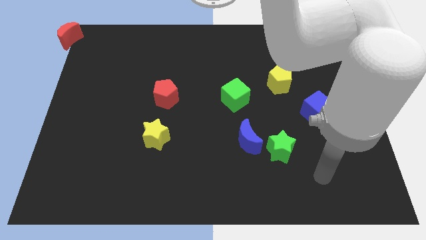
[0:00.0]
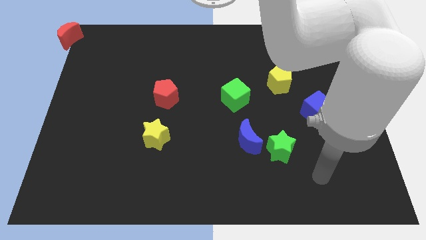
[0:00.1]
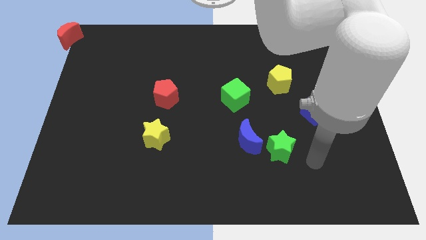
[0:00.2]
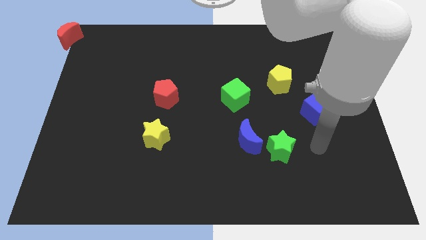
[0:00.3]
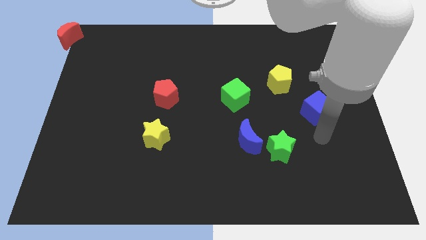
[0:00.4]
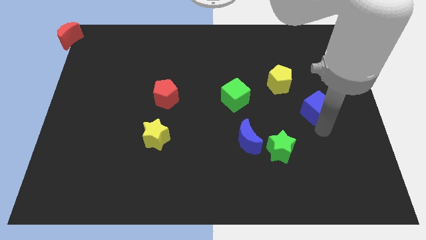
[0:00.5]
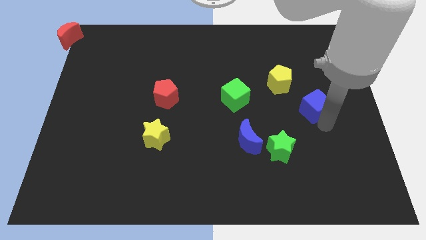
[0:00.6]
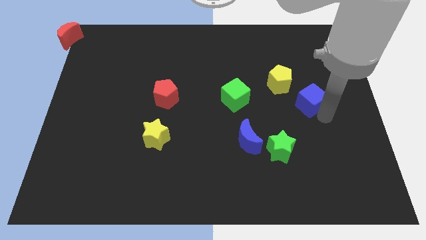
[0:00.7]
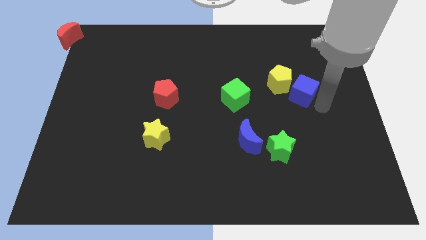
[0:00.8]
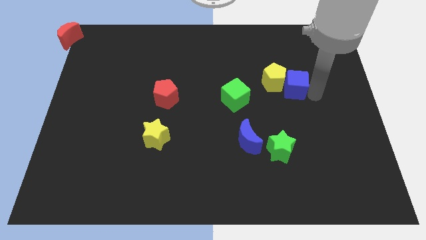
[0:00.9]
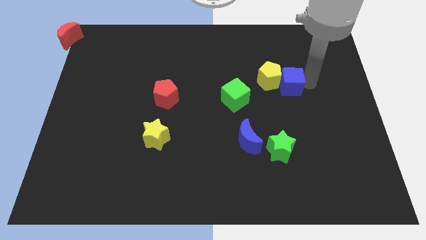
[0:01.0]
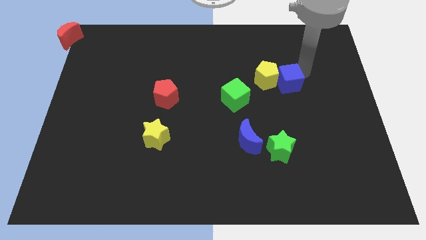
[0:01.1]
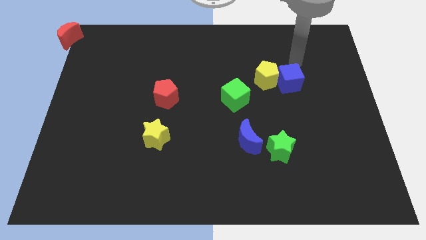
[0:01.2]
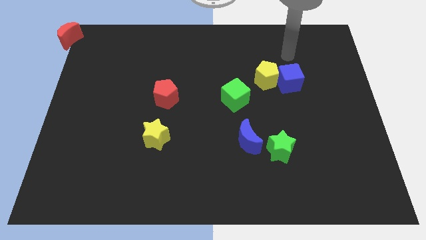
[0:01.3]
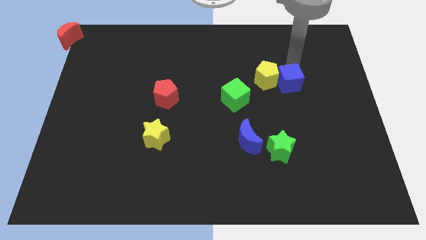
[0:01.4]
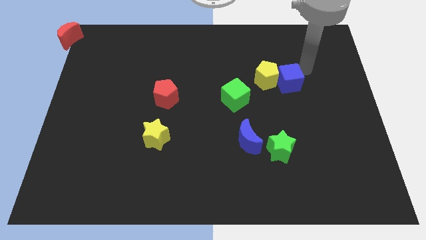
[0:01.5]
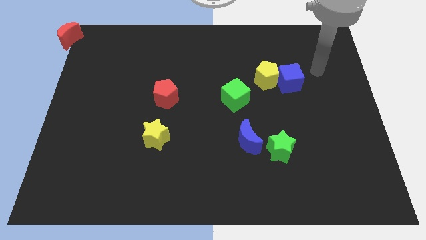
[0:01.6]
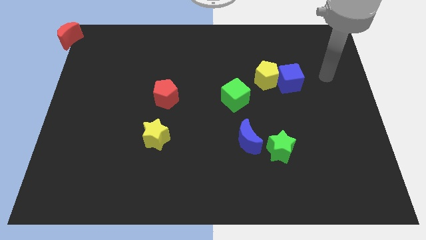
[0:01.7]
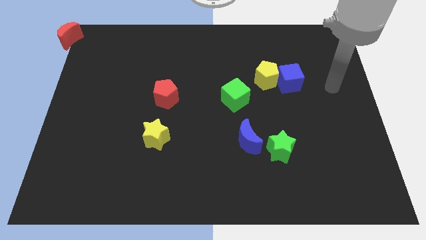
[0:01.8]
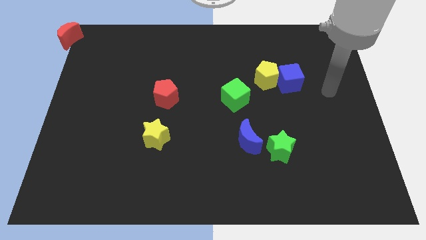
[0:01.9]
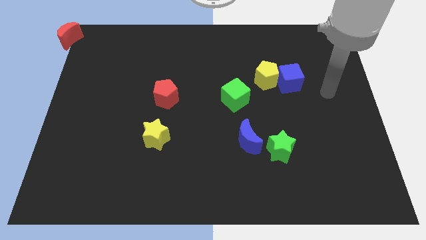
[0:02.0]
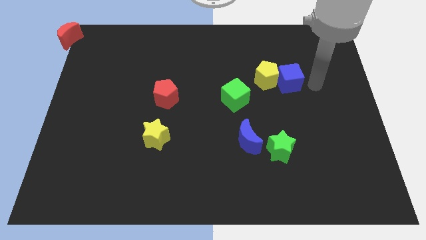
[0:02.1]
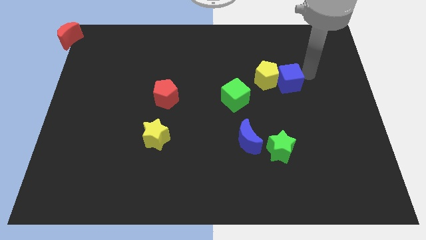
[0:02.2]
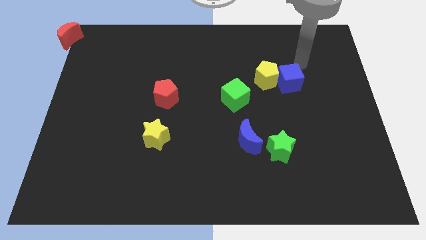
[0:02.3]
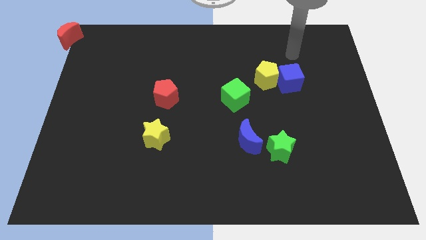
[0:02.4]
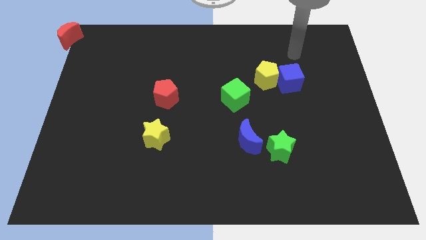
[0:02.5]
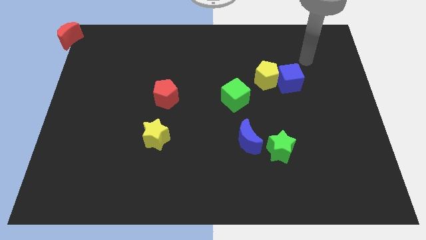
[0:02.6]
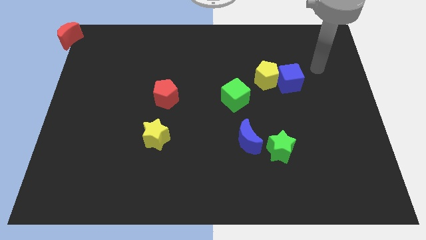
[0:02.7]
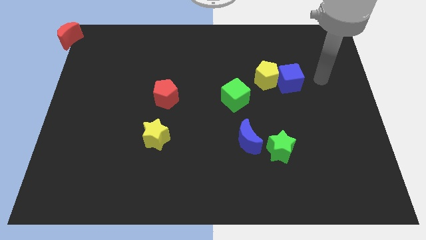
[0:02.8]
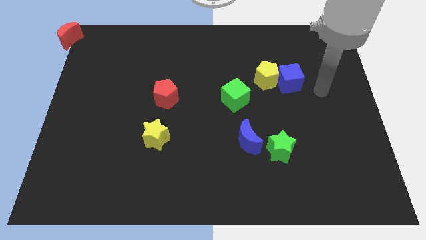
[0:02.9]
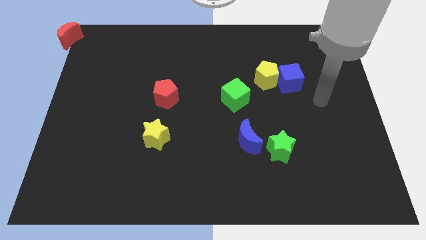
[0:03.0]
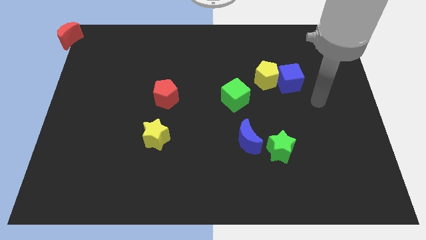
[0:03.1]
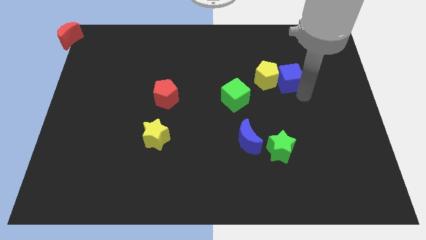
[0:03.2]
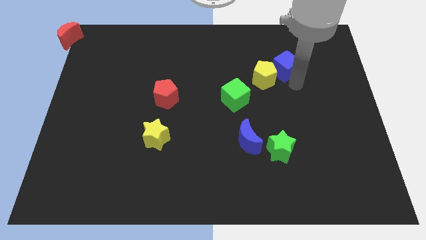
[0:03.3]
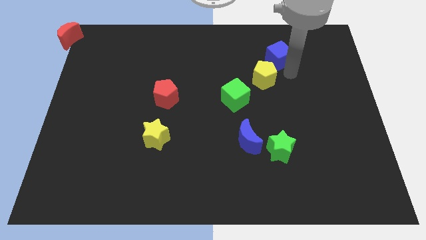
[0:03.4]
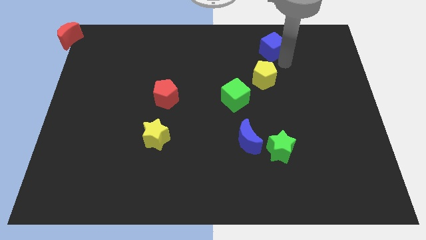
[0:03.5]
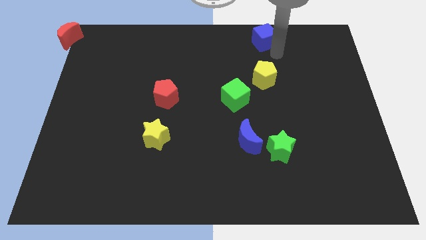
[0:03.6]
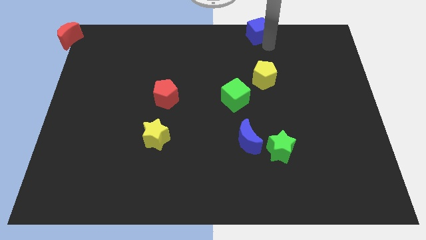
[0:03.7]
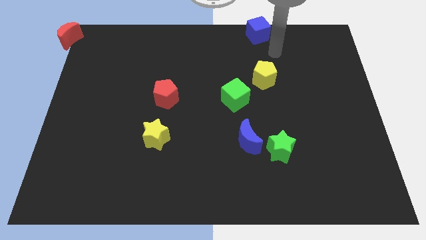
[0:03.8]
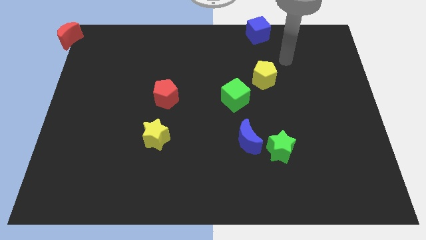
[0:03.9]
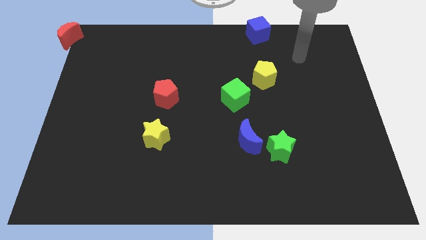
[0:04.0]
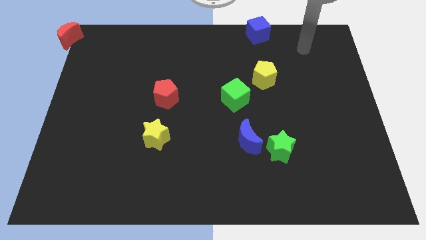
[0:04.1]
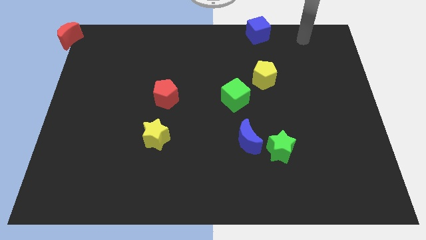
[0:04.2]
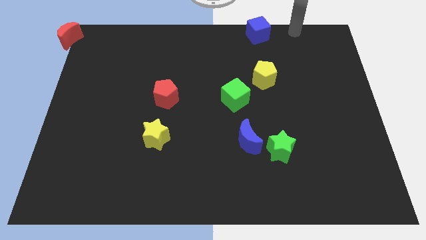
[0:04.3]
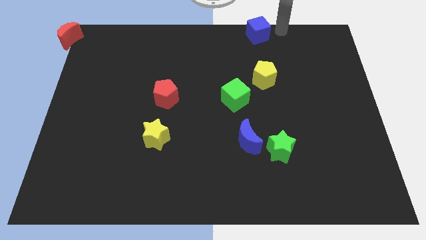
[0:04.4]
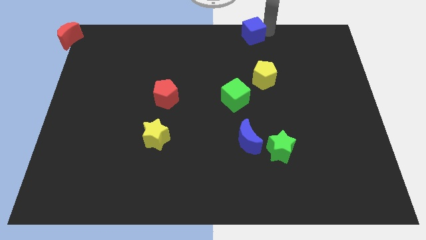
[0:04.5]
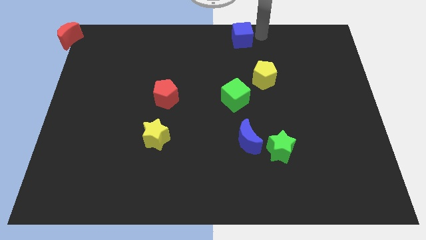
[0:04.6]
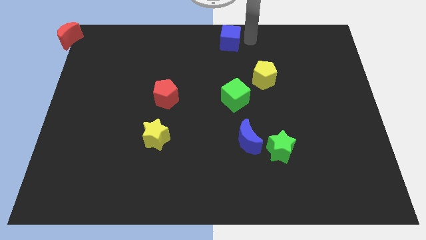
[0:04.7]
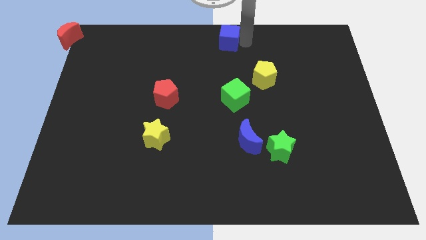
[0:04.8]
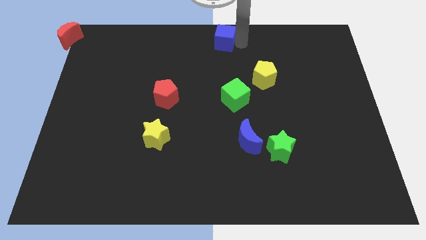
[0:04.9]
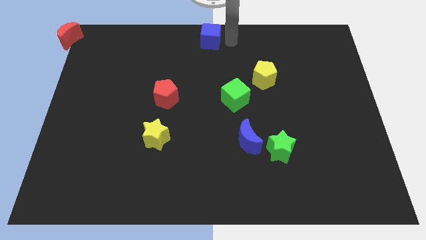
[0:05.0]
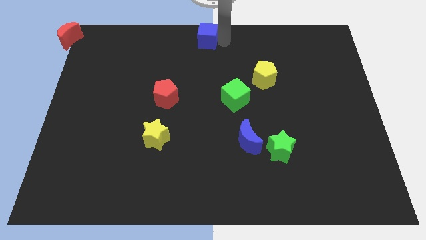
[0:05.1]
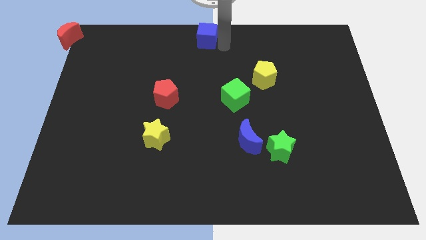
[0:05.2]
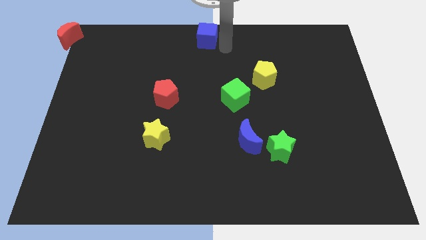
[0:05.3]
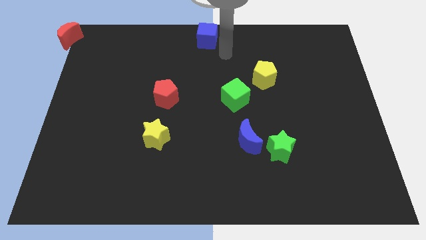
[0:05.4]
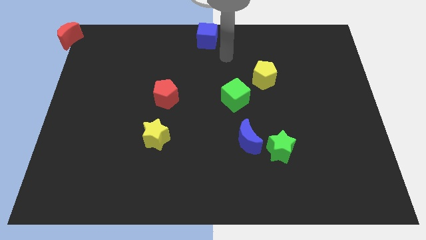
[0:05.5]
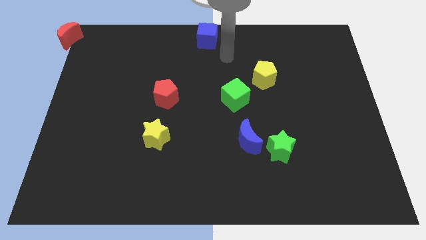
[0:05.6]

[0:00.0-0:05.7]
place the blue cube at the top center

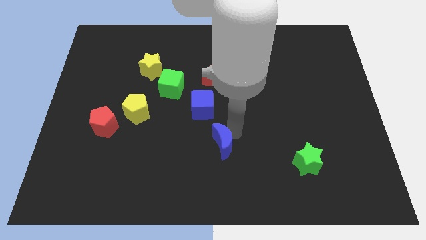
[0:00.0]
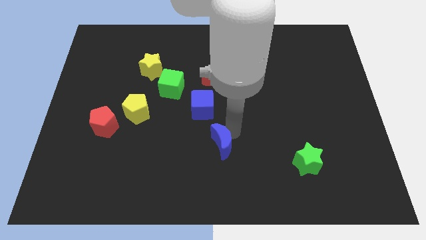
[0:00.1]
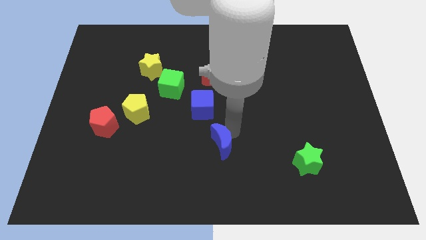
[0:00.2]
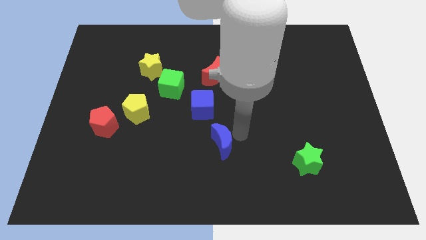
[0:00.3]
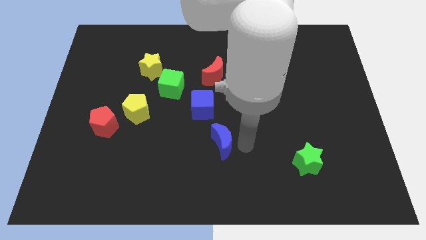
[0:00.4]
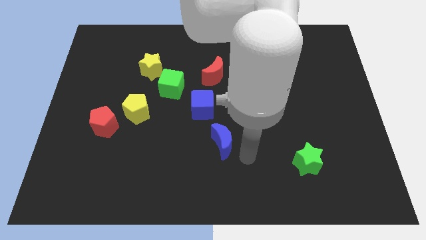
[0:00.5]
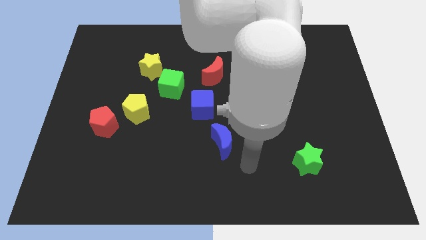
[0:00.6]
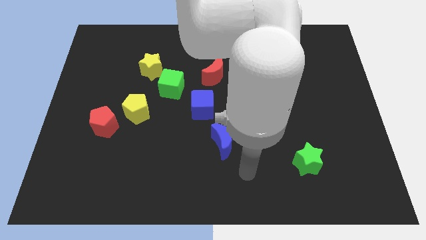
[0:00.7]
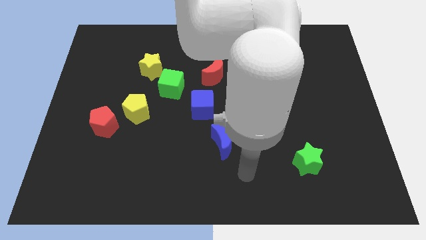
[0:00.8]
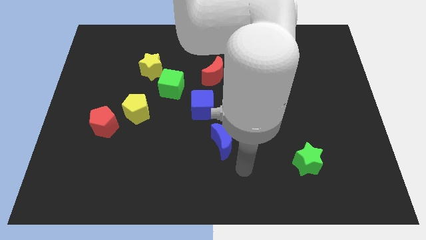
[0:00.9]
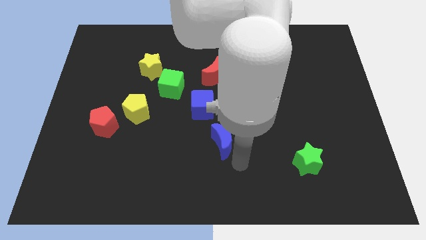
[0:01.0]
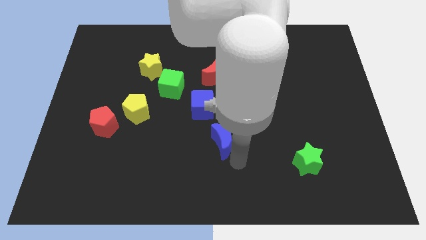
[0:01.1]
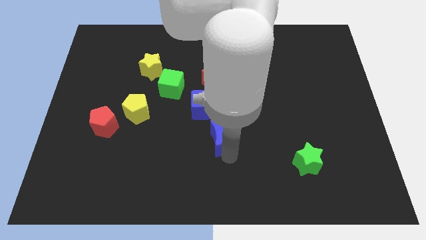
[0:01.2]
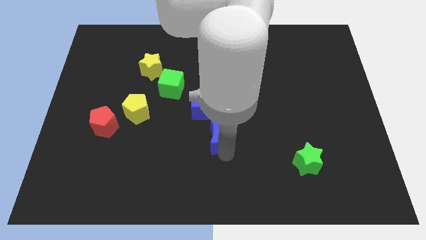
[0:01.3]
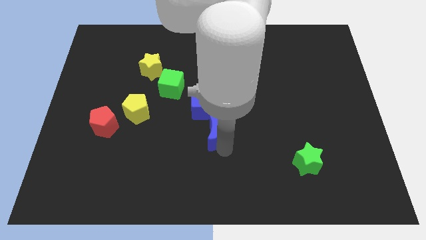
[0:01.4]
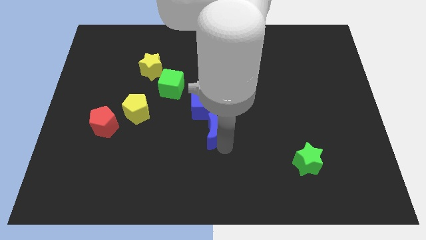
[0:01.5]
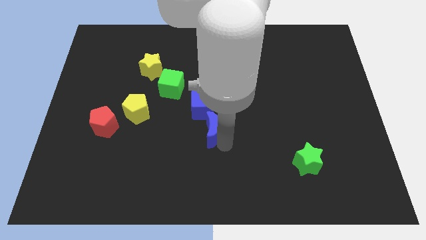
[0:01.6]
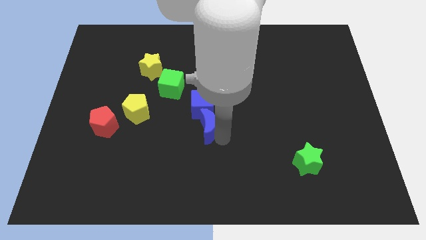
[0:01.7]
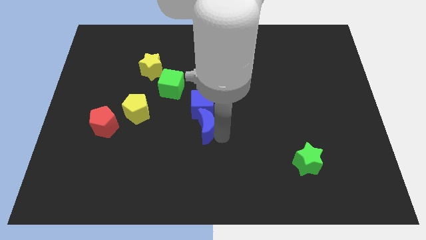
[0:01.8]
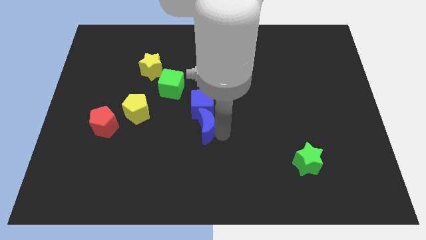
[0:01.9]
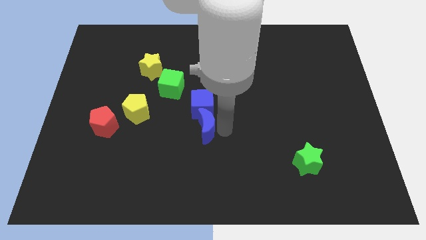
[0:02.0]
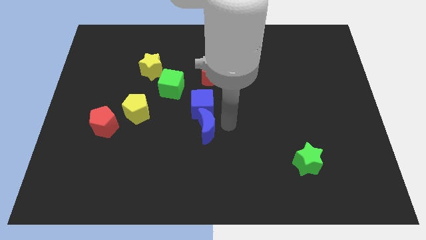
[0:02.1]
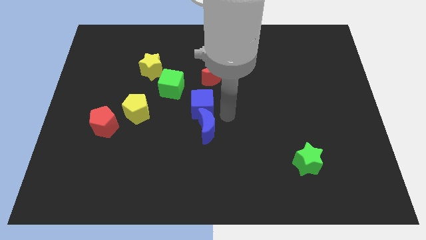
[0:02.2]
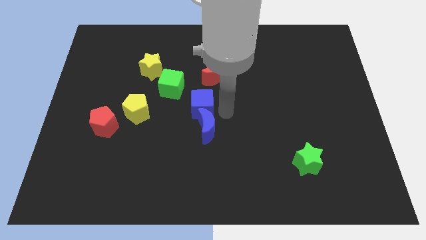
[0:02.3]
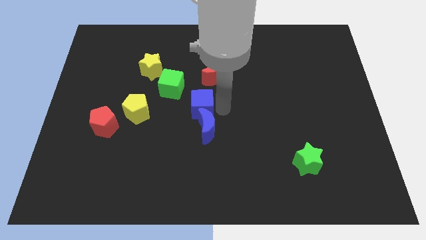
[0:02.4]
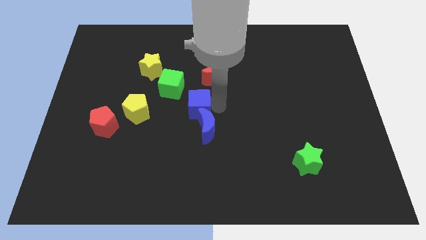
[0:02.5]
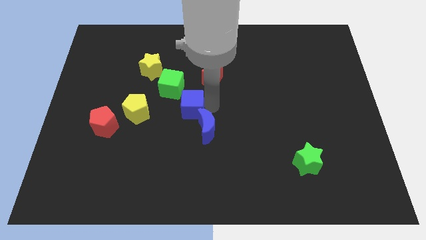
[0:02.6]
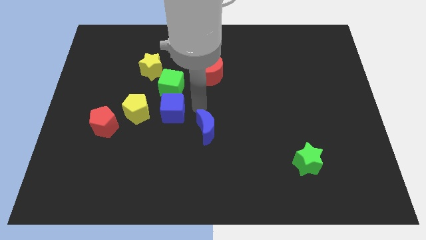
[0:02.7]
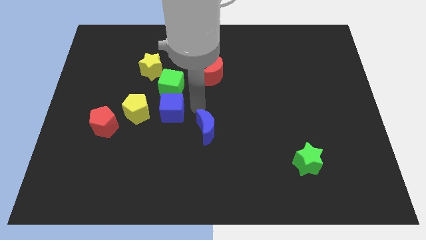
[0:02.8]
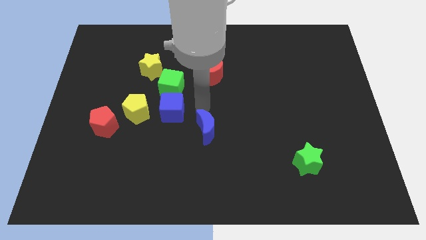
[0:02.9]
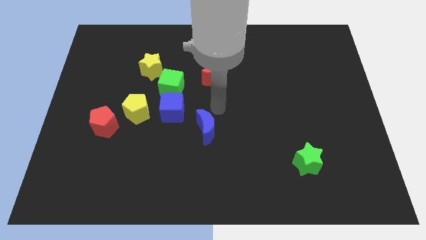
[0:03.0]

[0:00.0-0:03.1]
place the blue cube to the bottom of the green cube

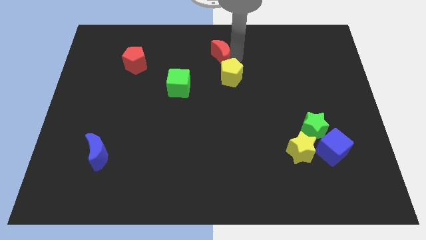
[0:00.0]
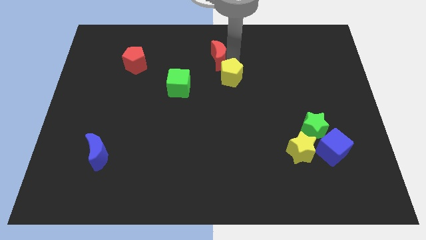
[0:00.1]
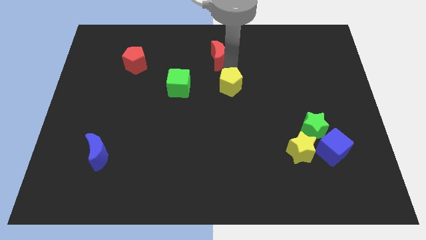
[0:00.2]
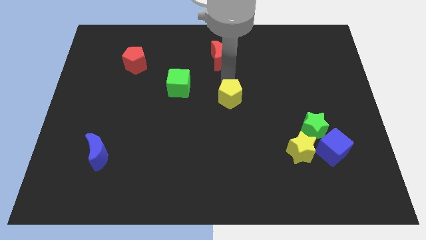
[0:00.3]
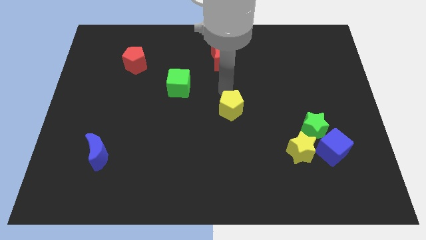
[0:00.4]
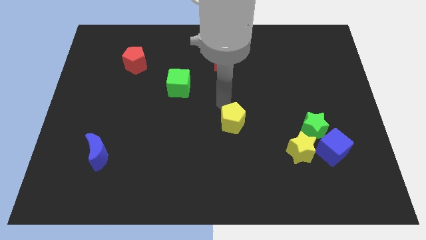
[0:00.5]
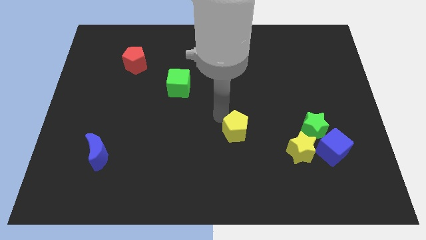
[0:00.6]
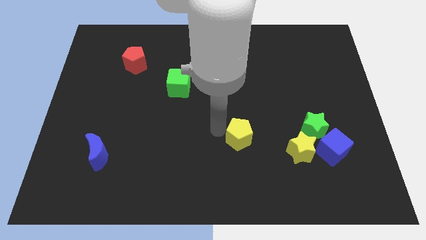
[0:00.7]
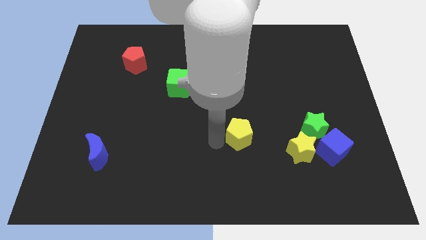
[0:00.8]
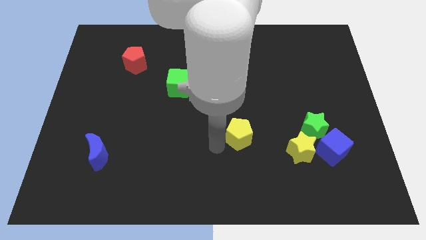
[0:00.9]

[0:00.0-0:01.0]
move the yellow pentagon to the bottom center
